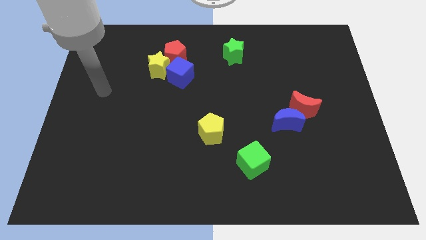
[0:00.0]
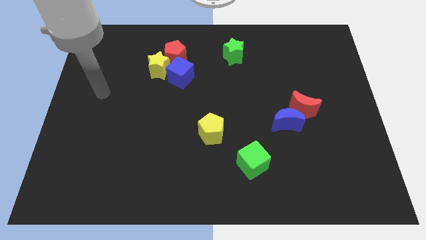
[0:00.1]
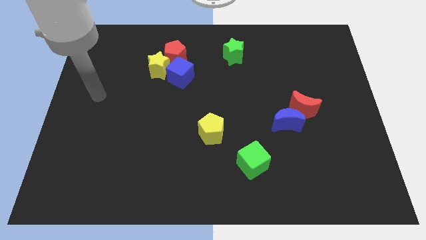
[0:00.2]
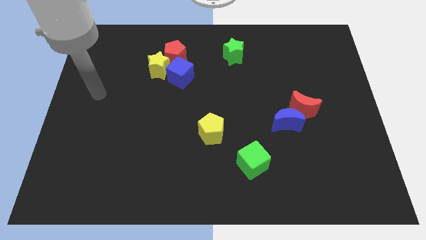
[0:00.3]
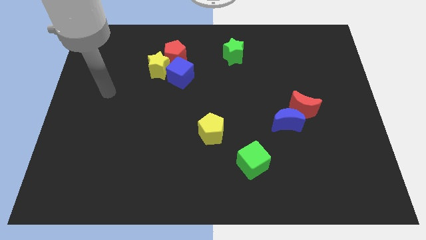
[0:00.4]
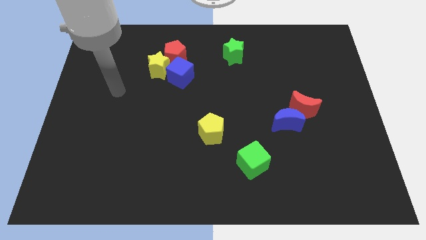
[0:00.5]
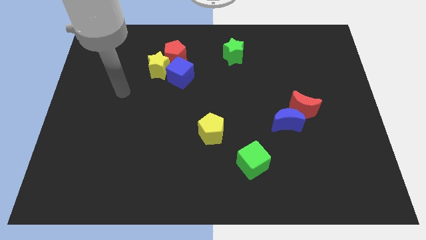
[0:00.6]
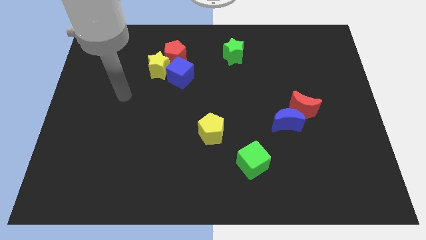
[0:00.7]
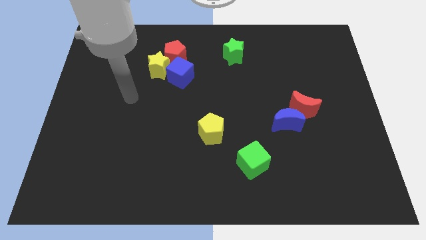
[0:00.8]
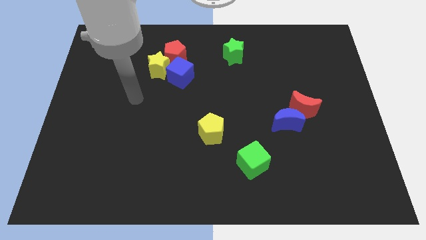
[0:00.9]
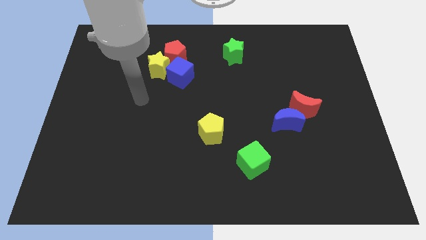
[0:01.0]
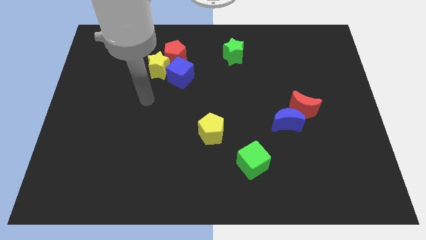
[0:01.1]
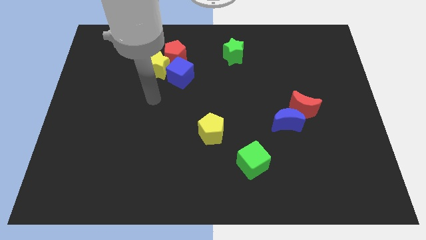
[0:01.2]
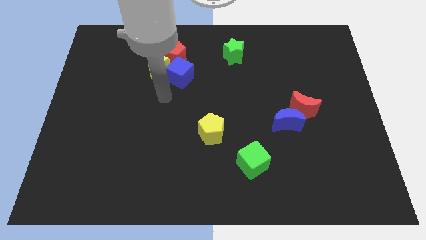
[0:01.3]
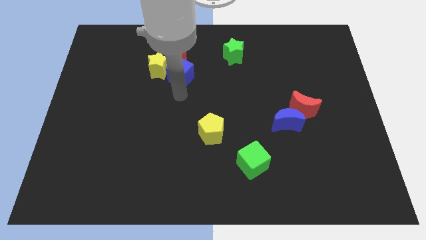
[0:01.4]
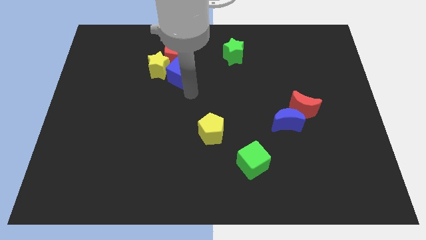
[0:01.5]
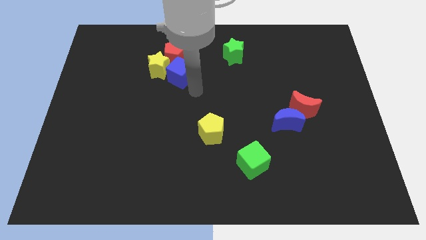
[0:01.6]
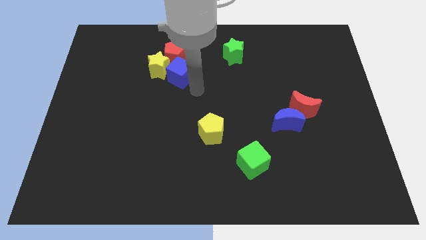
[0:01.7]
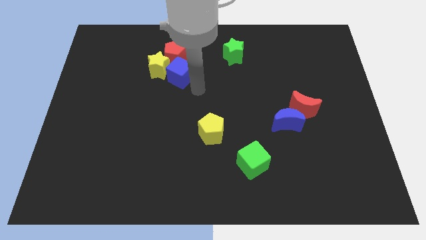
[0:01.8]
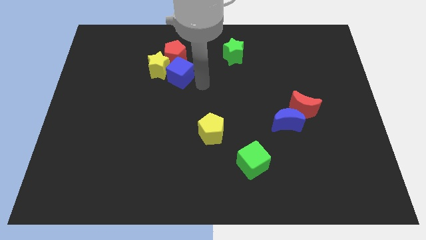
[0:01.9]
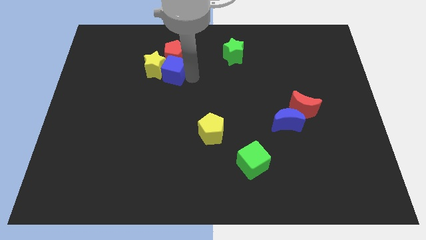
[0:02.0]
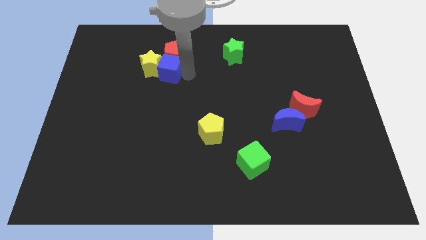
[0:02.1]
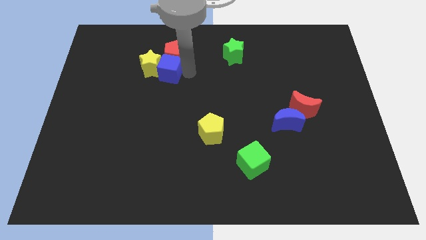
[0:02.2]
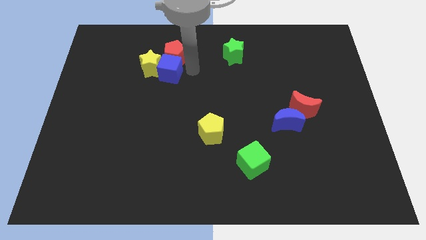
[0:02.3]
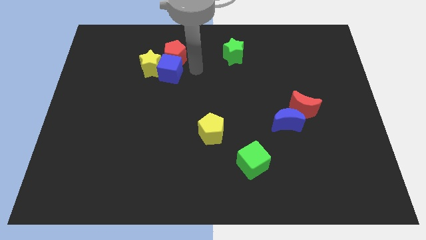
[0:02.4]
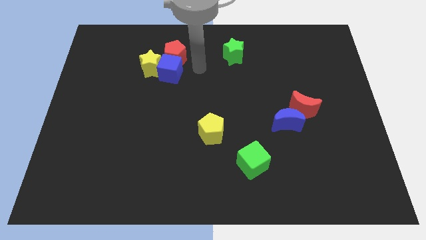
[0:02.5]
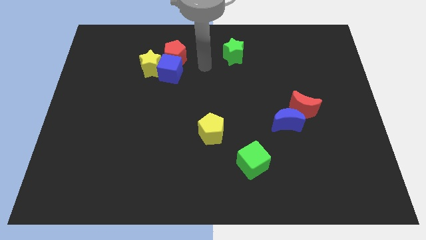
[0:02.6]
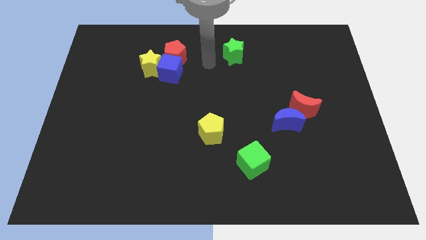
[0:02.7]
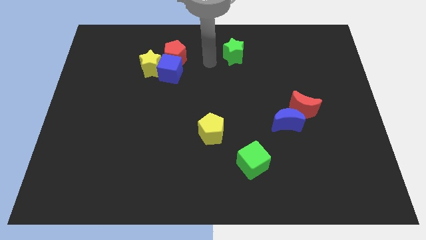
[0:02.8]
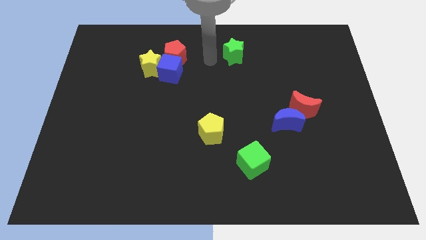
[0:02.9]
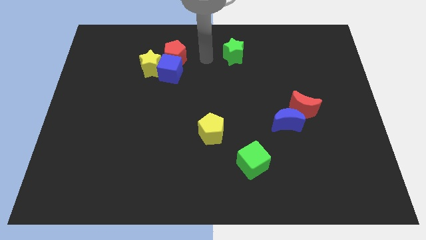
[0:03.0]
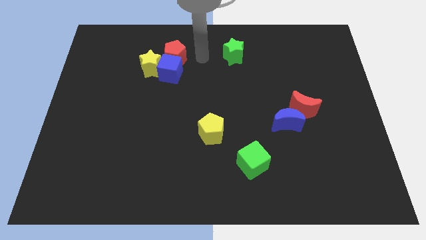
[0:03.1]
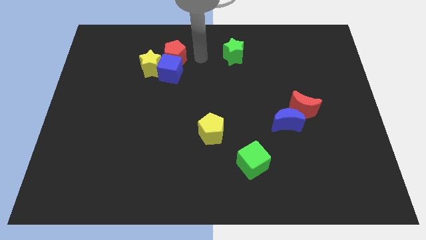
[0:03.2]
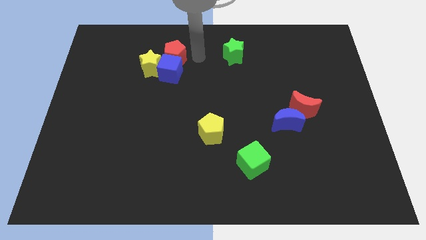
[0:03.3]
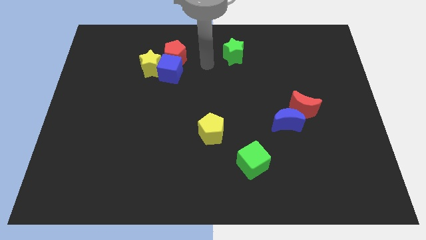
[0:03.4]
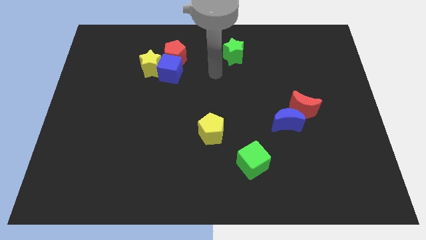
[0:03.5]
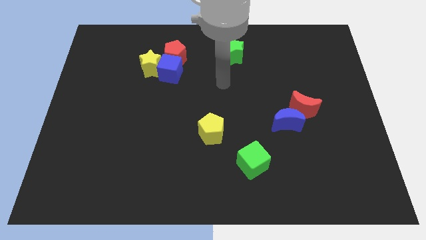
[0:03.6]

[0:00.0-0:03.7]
slightly touch the blue cube

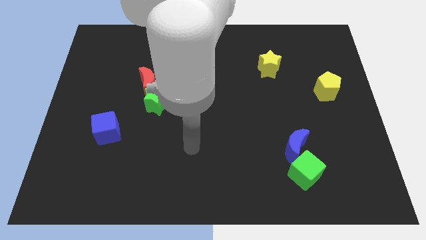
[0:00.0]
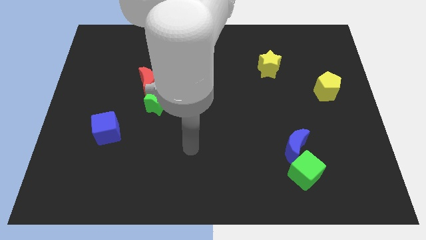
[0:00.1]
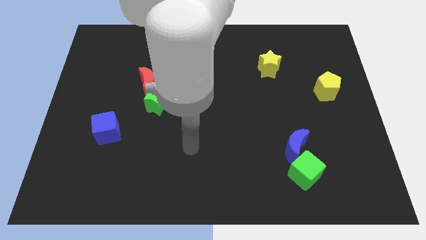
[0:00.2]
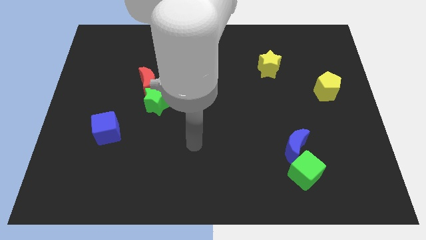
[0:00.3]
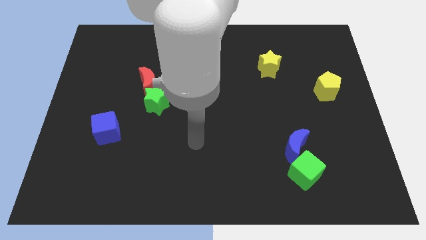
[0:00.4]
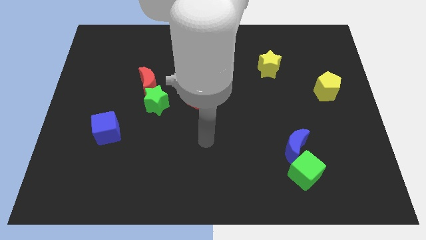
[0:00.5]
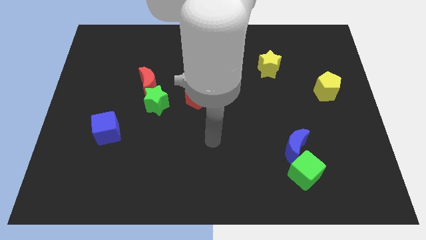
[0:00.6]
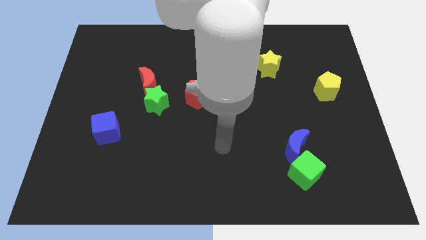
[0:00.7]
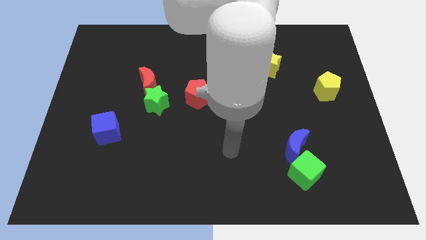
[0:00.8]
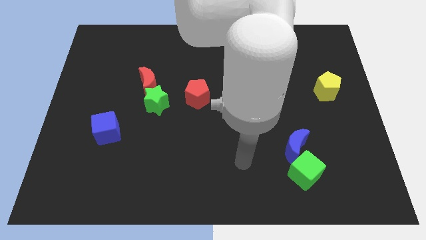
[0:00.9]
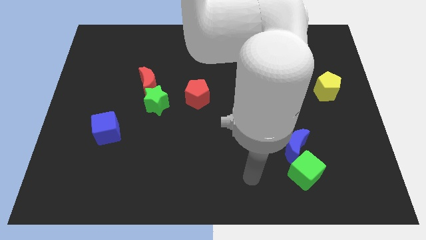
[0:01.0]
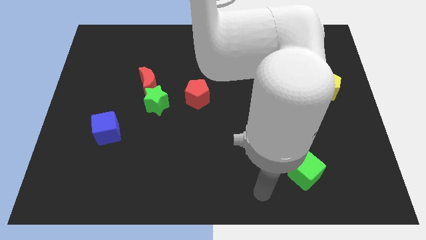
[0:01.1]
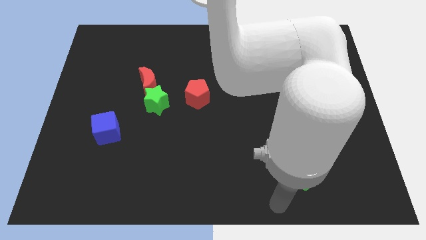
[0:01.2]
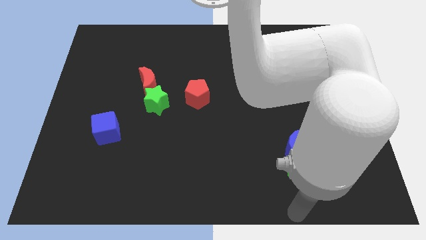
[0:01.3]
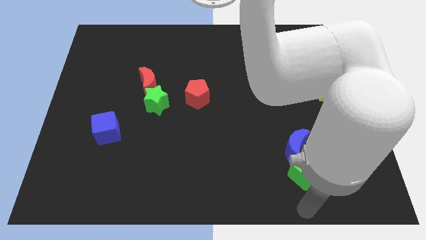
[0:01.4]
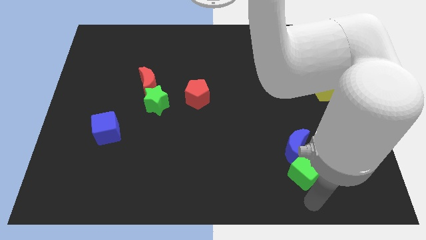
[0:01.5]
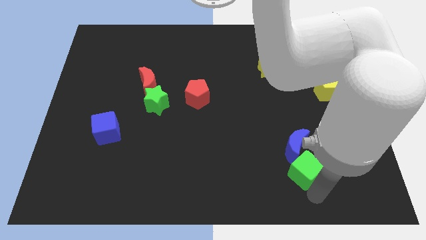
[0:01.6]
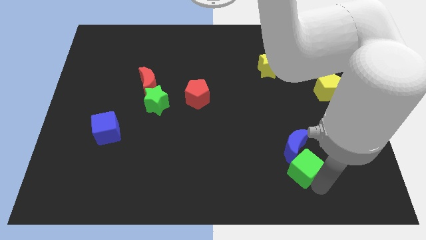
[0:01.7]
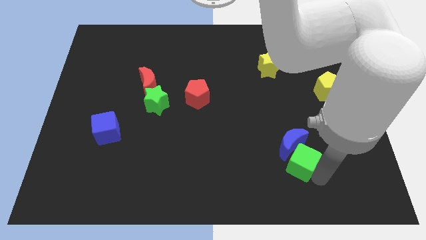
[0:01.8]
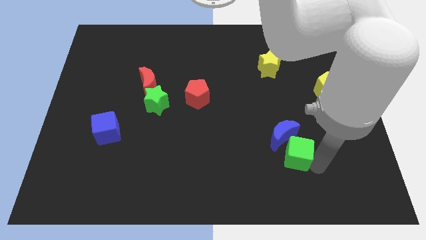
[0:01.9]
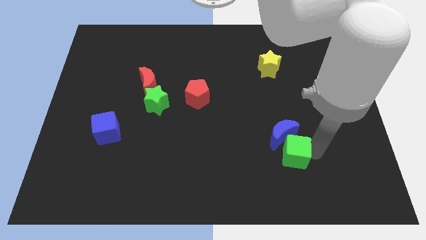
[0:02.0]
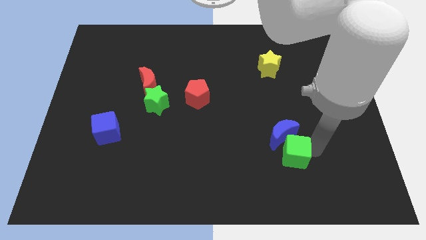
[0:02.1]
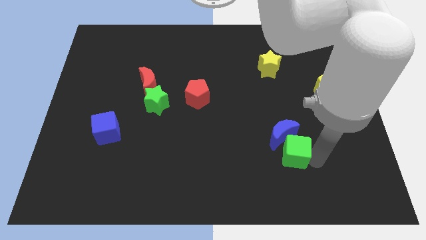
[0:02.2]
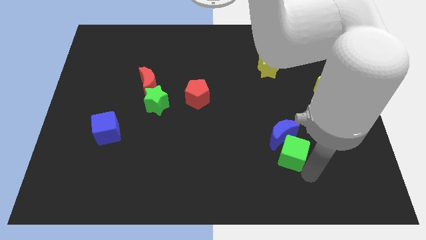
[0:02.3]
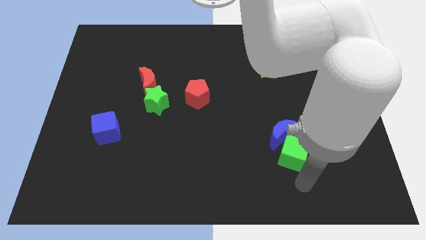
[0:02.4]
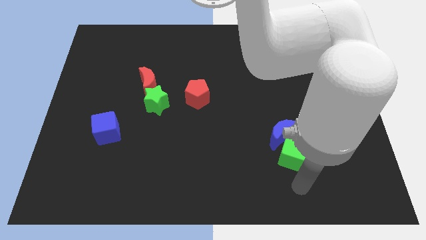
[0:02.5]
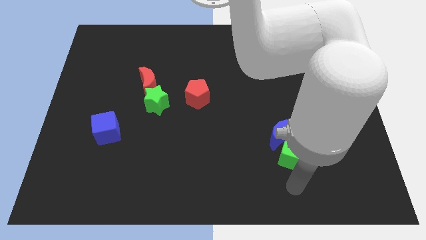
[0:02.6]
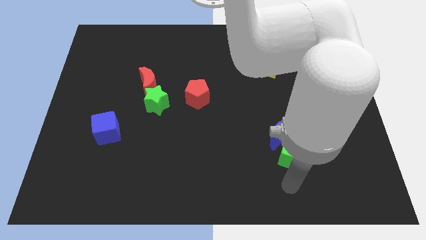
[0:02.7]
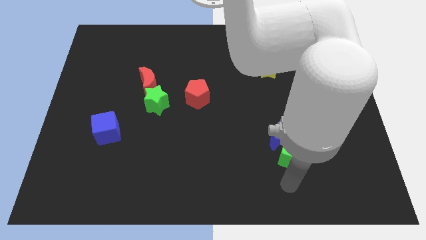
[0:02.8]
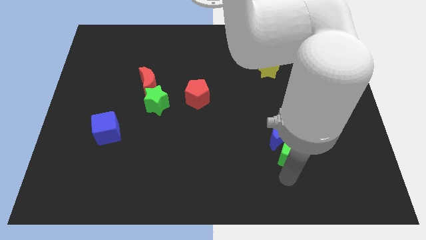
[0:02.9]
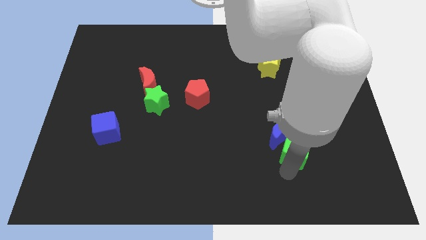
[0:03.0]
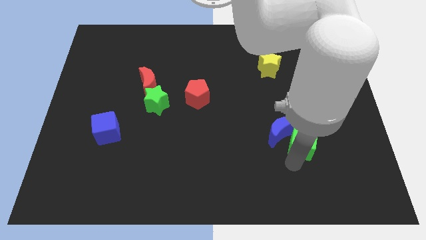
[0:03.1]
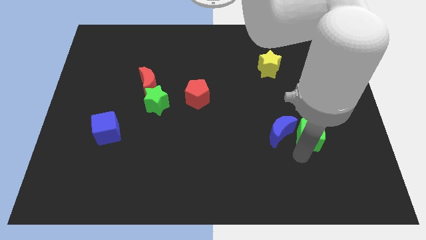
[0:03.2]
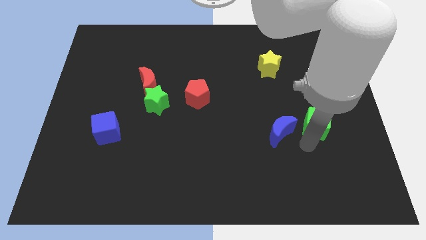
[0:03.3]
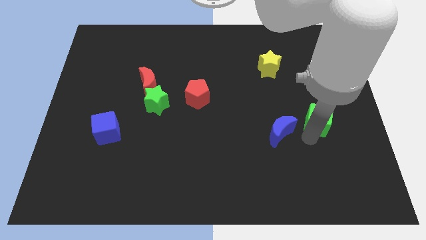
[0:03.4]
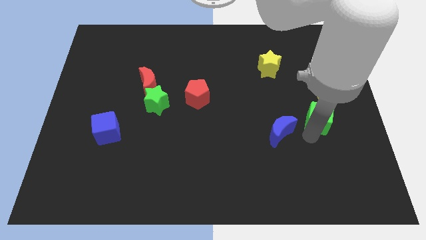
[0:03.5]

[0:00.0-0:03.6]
separate the green cube and blue crescent

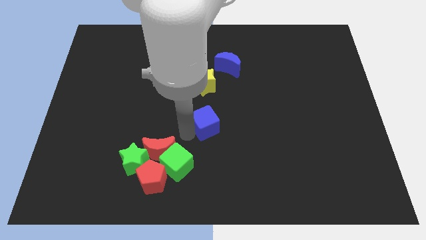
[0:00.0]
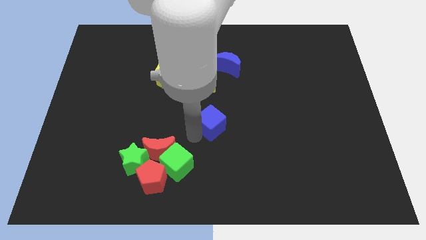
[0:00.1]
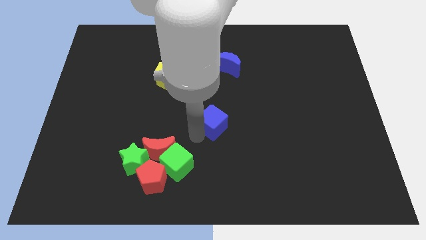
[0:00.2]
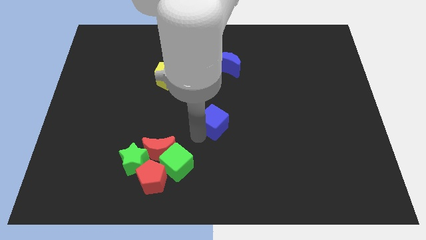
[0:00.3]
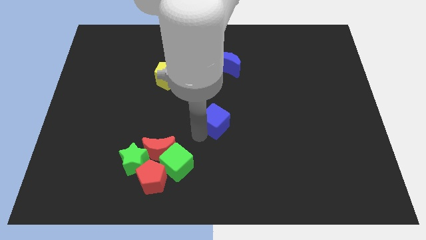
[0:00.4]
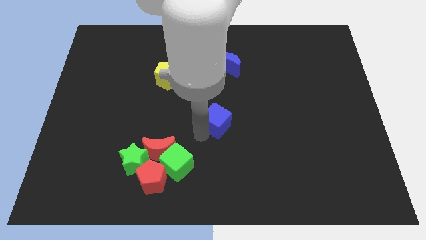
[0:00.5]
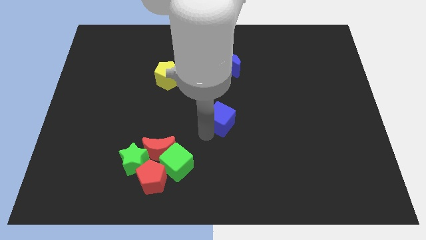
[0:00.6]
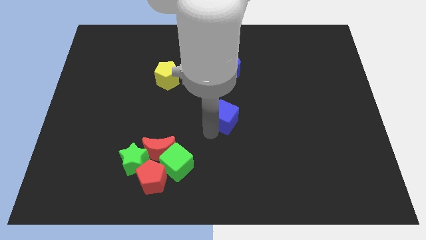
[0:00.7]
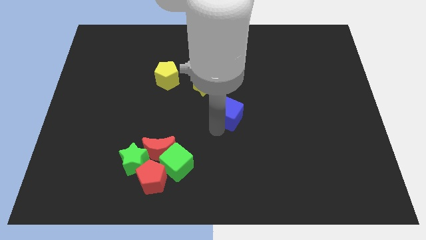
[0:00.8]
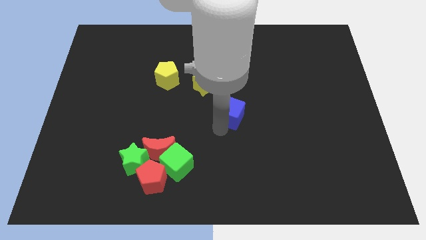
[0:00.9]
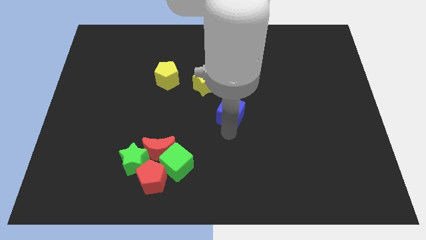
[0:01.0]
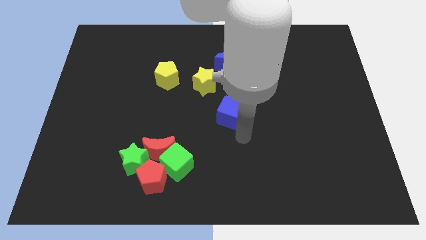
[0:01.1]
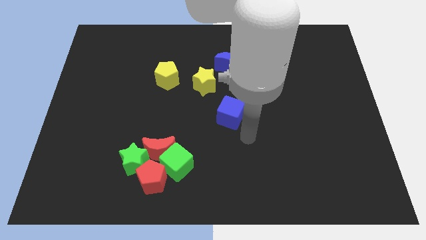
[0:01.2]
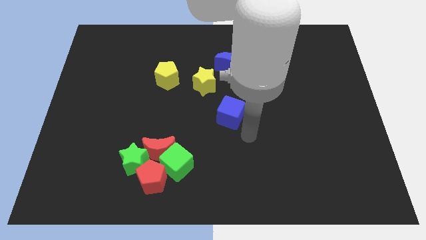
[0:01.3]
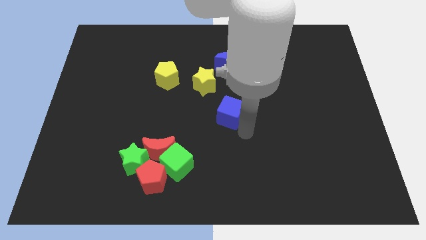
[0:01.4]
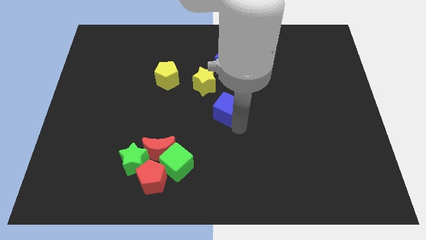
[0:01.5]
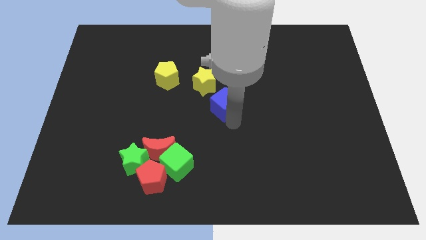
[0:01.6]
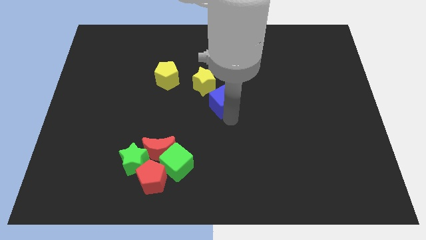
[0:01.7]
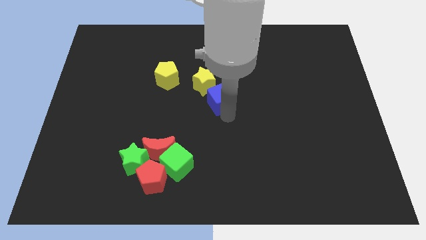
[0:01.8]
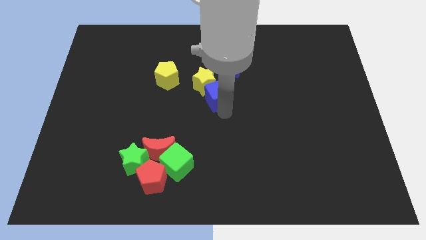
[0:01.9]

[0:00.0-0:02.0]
move the blue cube to bottom right of yellow star
